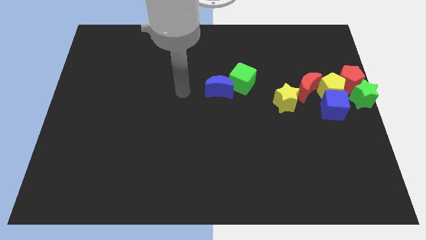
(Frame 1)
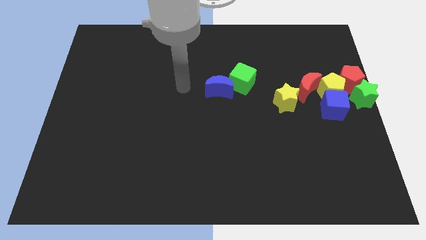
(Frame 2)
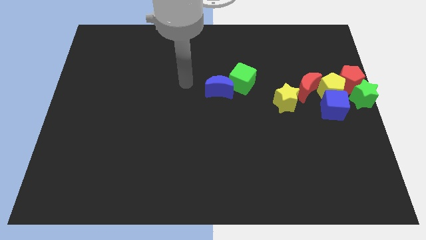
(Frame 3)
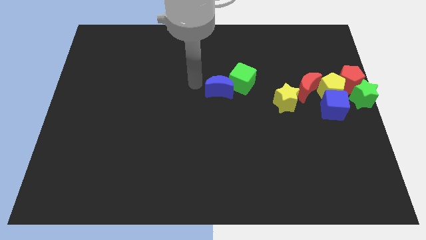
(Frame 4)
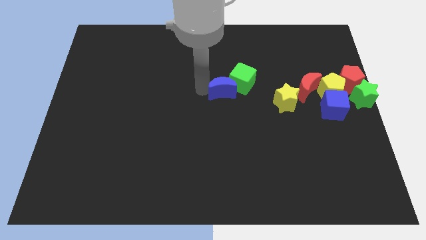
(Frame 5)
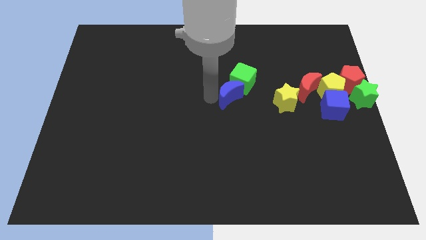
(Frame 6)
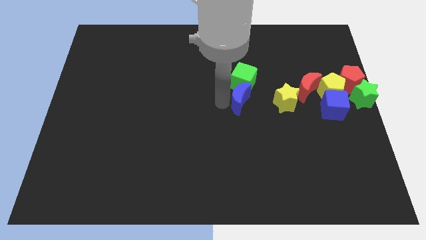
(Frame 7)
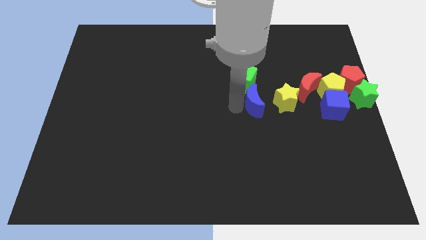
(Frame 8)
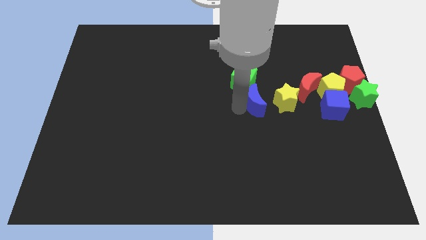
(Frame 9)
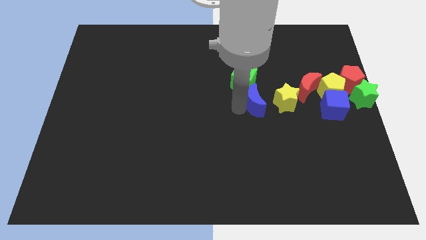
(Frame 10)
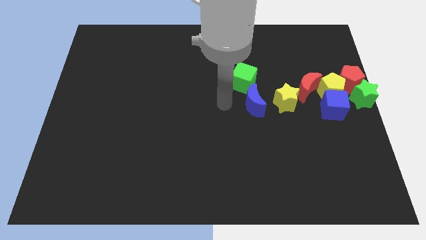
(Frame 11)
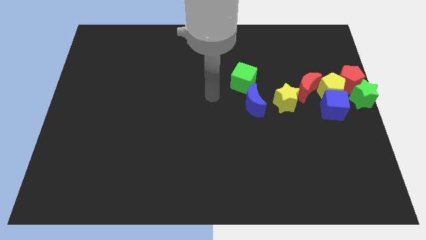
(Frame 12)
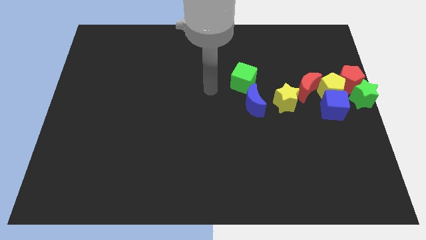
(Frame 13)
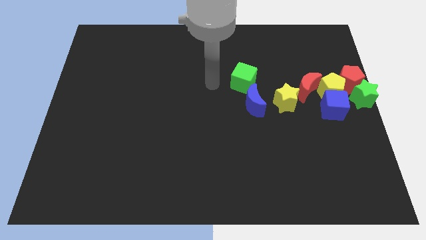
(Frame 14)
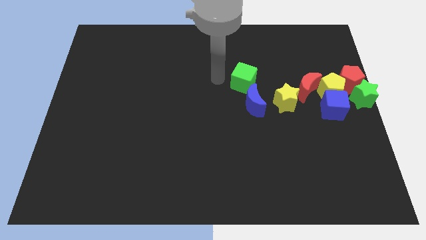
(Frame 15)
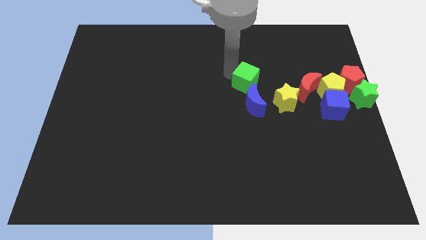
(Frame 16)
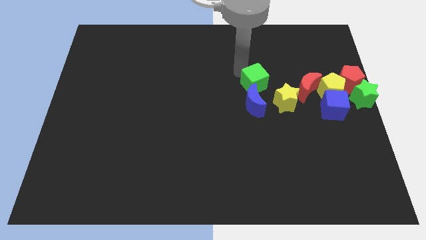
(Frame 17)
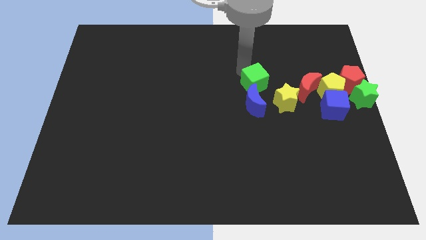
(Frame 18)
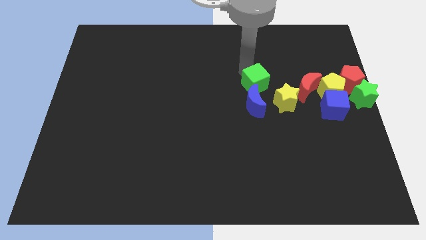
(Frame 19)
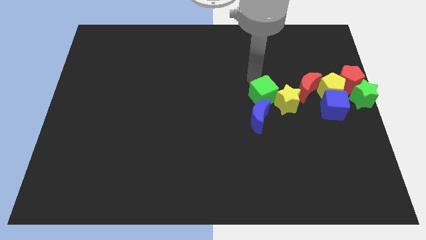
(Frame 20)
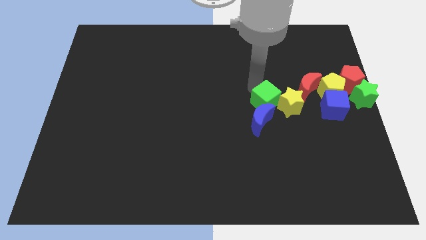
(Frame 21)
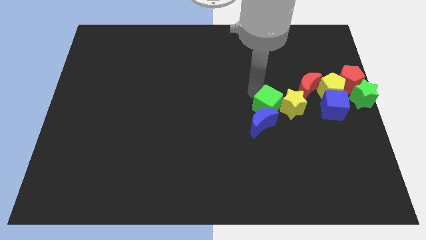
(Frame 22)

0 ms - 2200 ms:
place the green cube and blue moon close to yellow star

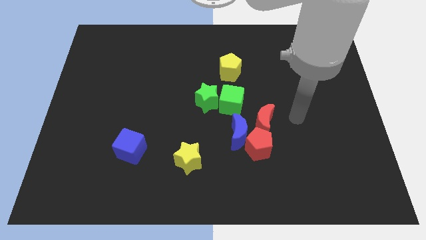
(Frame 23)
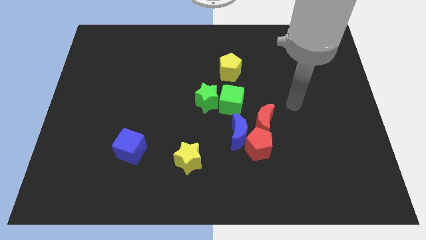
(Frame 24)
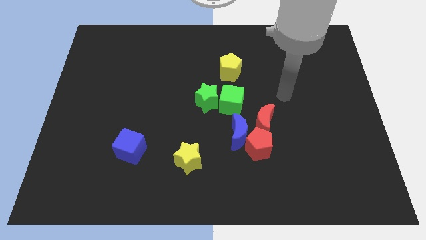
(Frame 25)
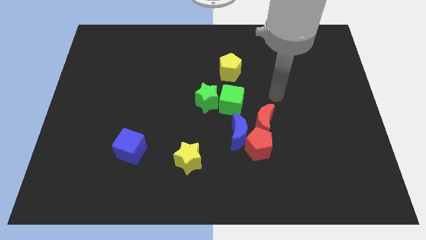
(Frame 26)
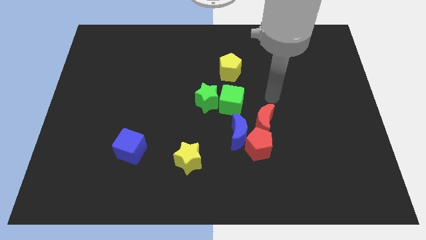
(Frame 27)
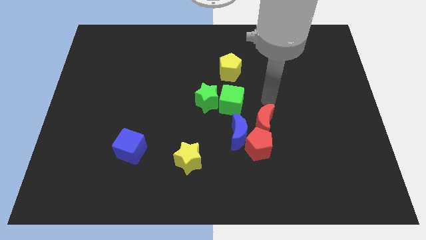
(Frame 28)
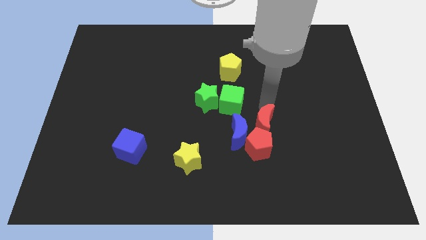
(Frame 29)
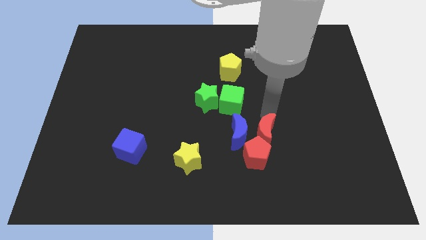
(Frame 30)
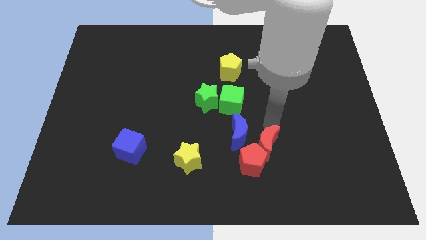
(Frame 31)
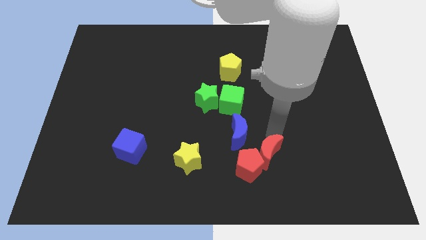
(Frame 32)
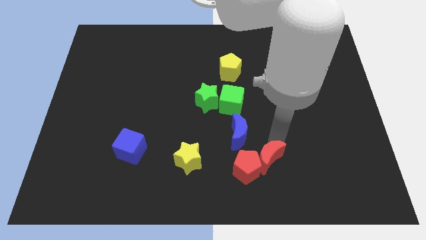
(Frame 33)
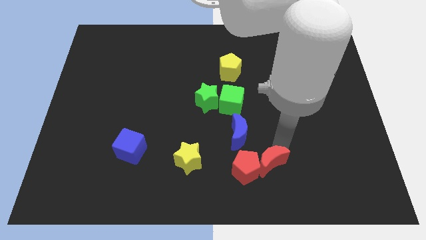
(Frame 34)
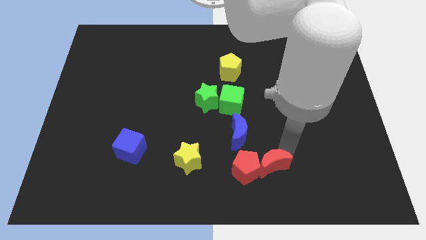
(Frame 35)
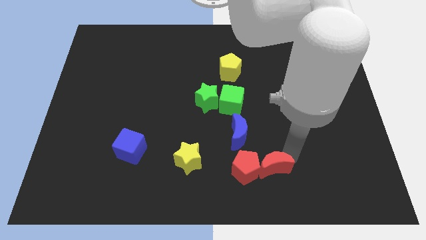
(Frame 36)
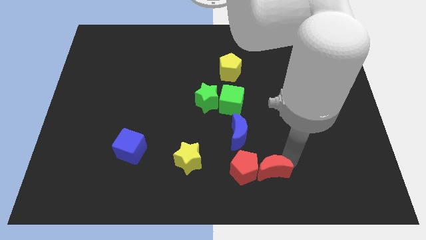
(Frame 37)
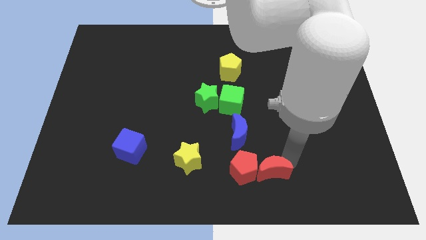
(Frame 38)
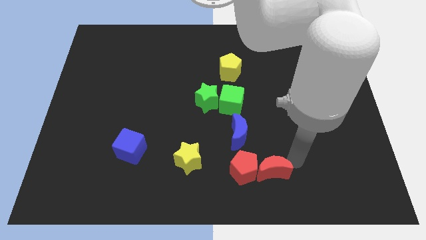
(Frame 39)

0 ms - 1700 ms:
move the red moon and red pentagon to the bottom of the board

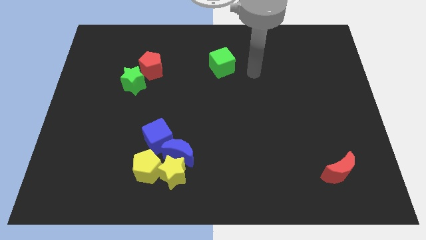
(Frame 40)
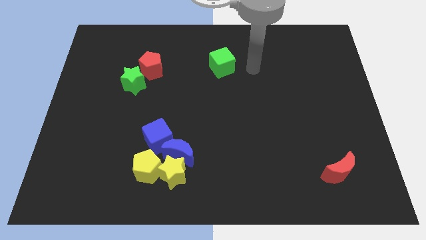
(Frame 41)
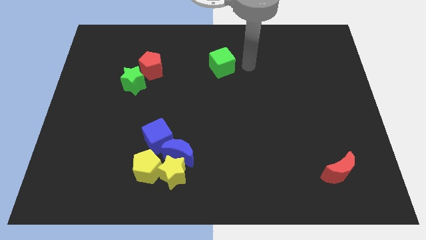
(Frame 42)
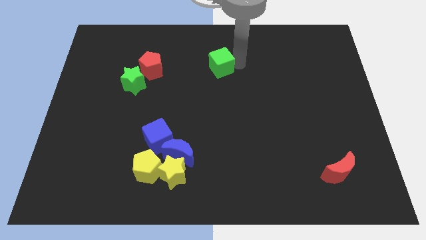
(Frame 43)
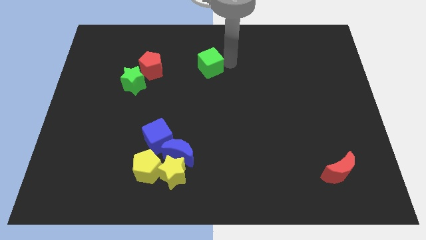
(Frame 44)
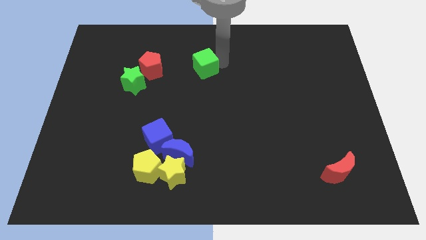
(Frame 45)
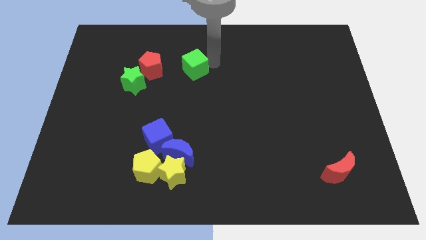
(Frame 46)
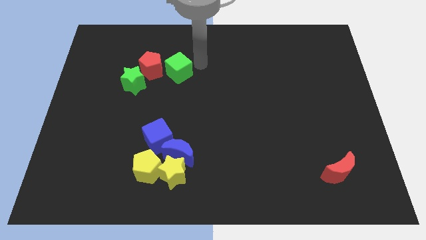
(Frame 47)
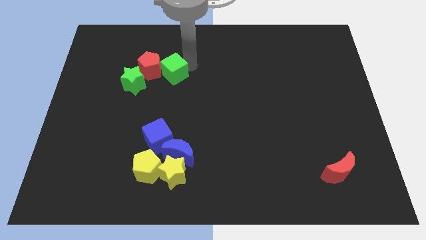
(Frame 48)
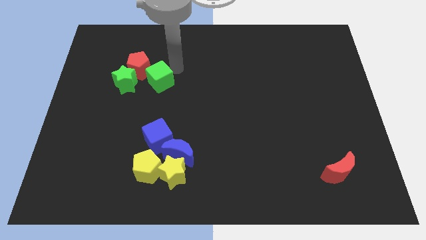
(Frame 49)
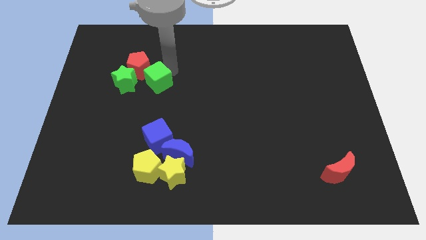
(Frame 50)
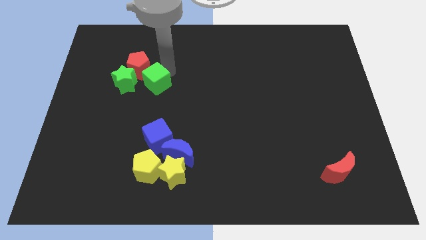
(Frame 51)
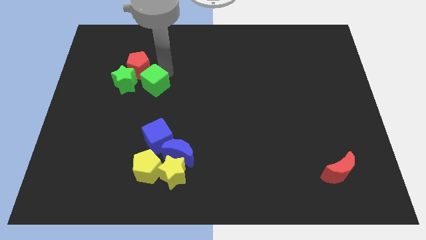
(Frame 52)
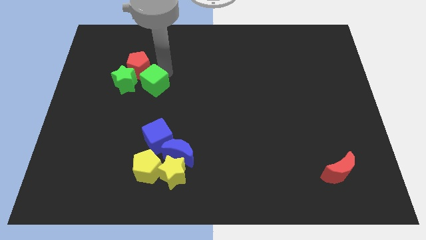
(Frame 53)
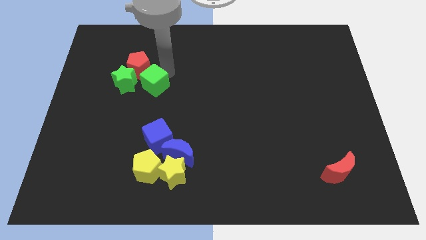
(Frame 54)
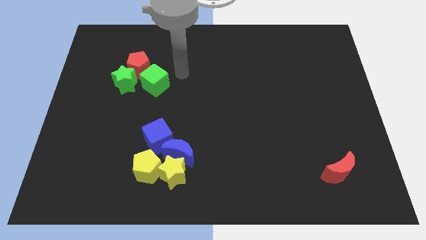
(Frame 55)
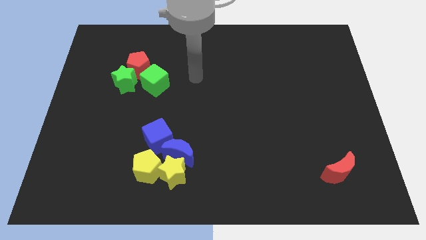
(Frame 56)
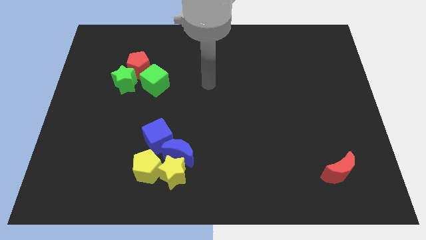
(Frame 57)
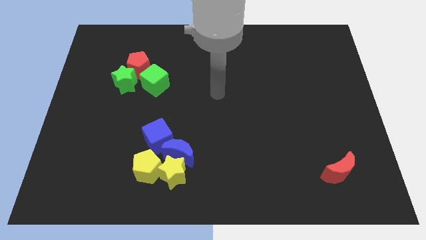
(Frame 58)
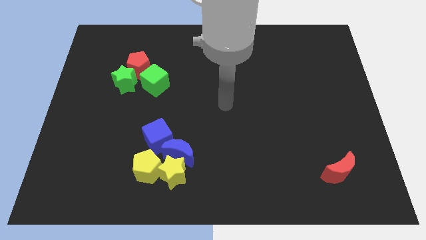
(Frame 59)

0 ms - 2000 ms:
push the green cube into the red pentagon

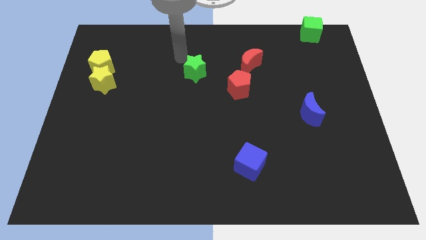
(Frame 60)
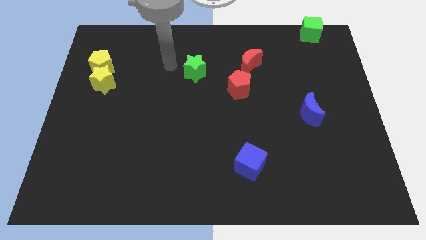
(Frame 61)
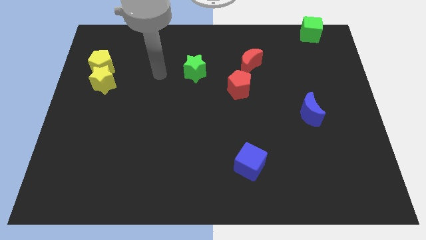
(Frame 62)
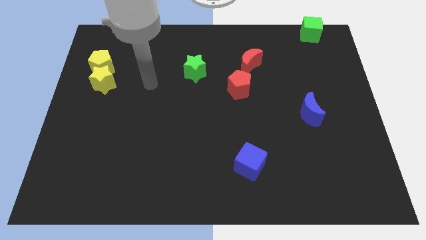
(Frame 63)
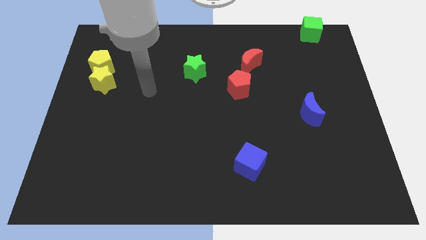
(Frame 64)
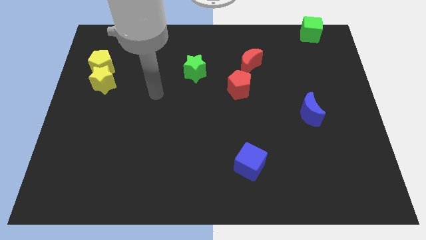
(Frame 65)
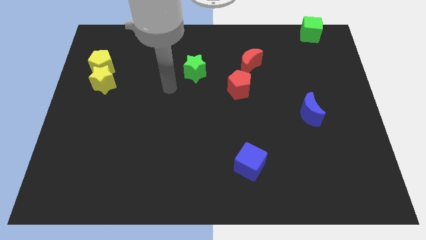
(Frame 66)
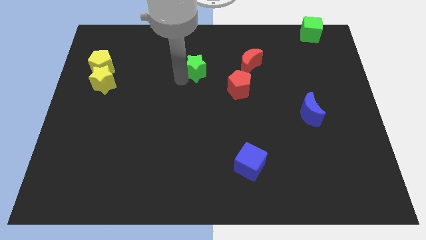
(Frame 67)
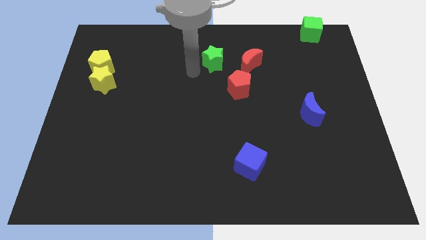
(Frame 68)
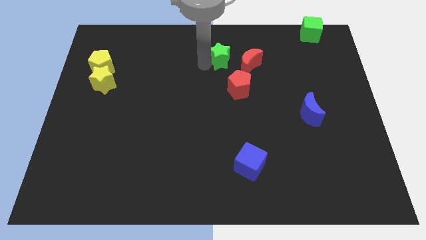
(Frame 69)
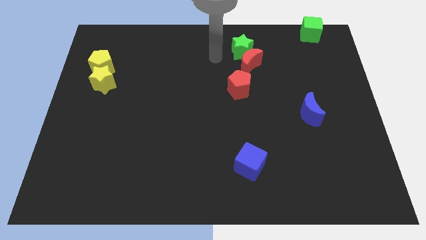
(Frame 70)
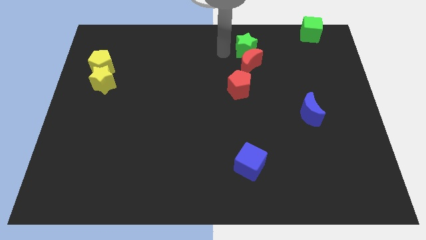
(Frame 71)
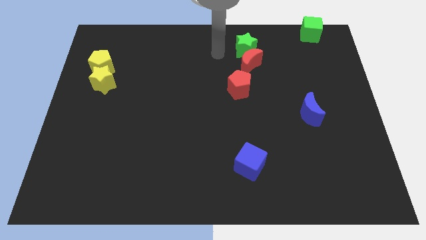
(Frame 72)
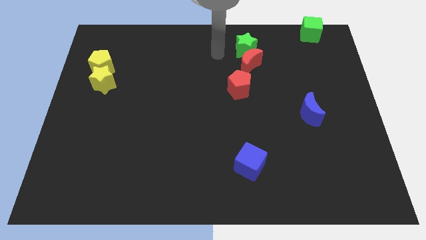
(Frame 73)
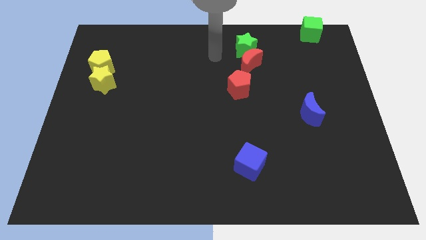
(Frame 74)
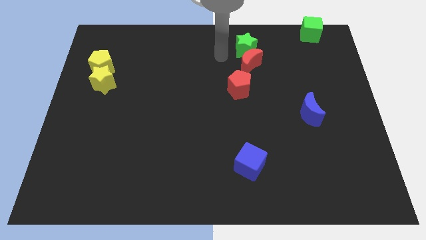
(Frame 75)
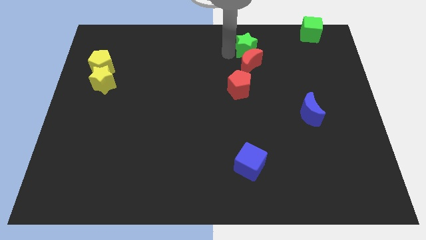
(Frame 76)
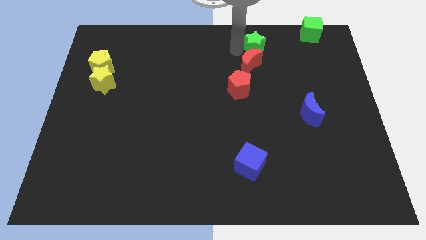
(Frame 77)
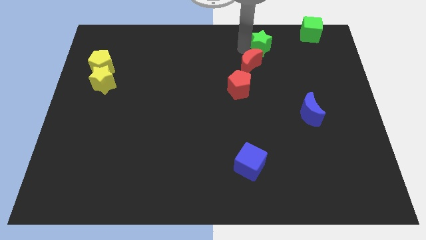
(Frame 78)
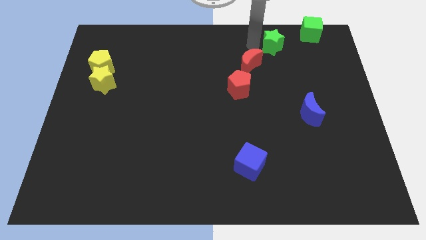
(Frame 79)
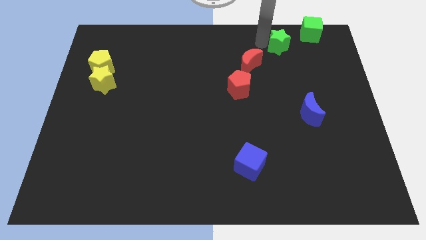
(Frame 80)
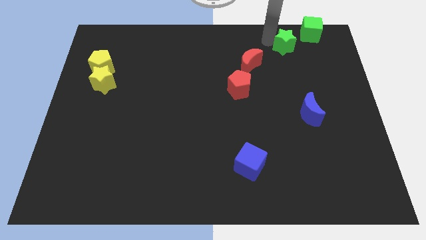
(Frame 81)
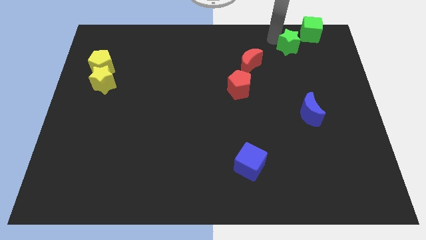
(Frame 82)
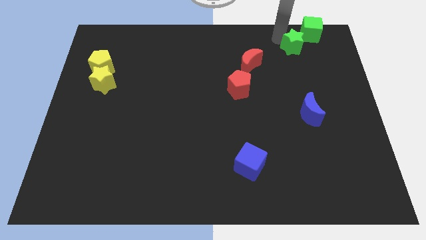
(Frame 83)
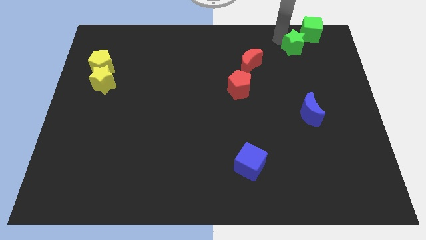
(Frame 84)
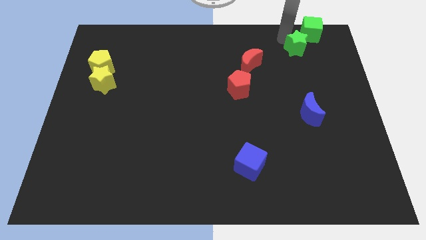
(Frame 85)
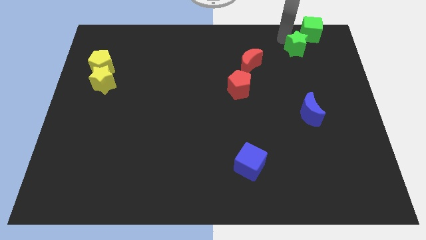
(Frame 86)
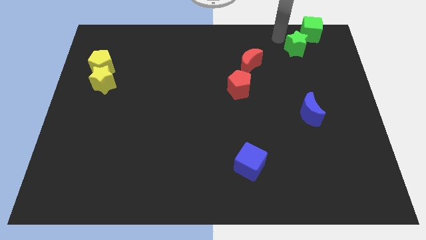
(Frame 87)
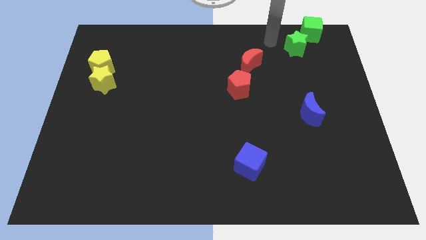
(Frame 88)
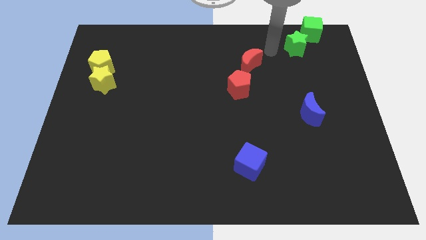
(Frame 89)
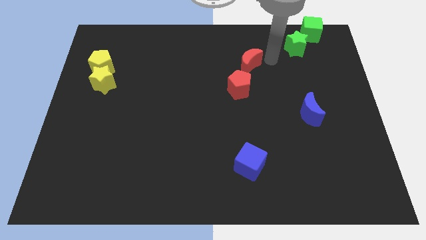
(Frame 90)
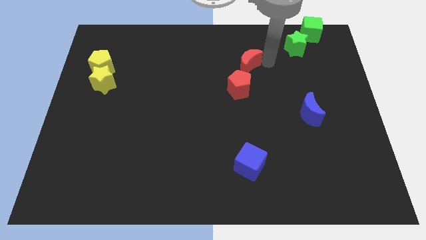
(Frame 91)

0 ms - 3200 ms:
push the green star near the green cube
